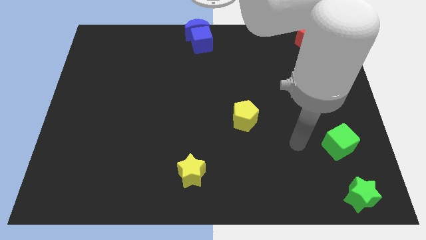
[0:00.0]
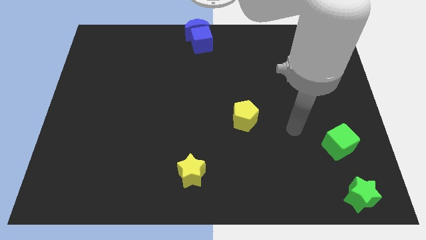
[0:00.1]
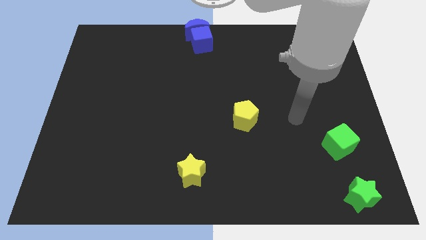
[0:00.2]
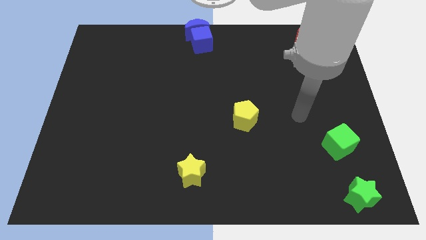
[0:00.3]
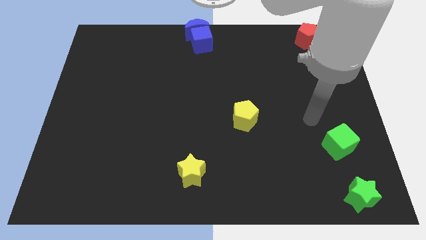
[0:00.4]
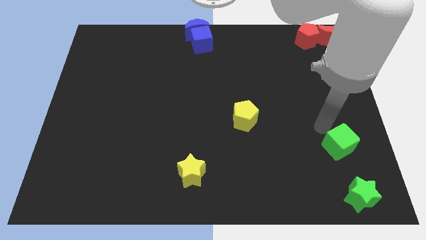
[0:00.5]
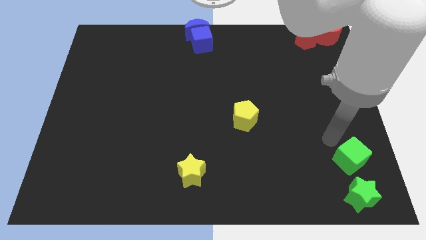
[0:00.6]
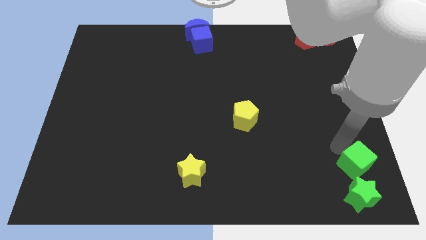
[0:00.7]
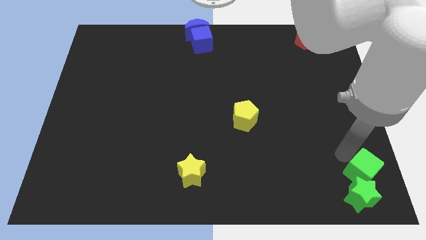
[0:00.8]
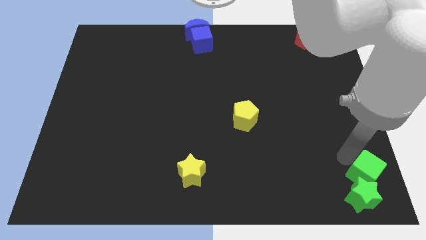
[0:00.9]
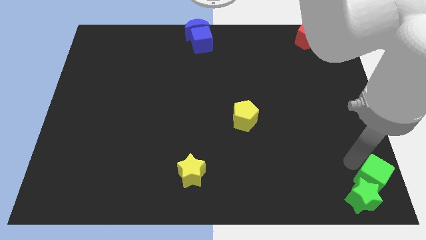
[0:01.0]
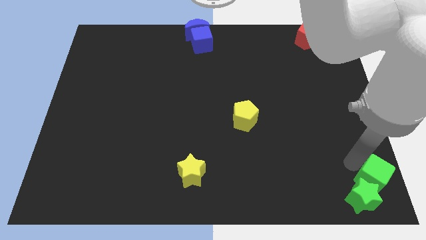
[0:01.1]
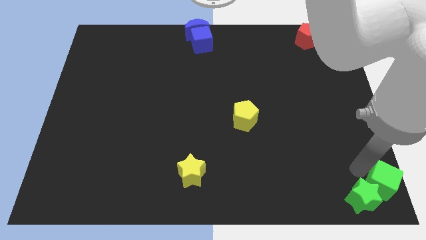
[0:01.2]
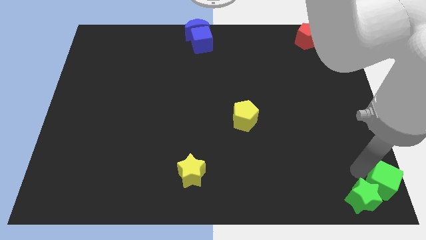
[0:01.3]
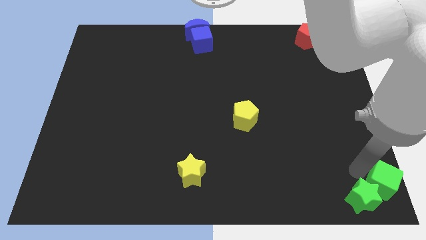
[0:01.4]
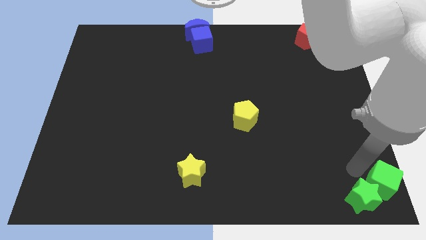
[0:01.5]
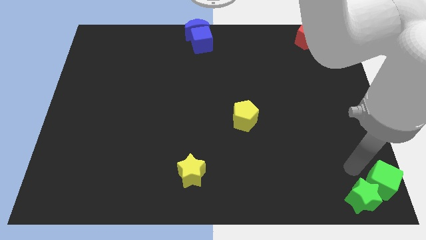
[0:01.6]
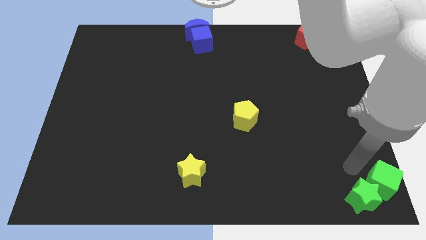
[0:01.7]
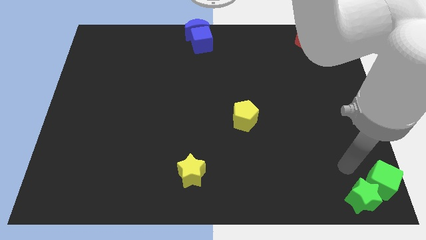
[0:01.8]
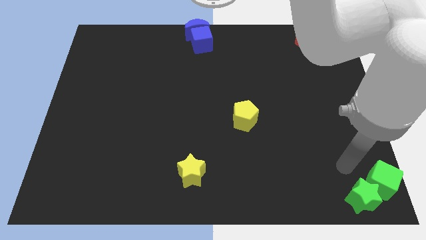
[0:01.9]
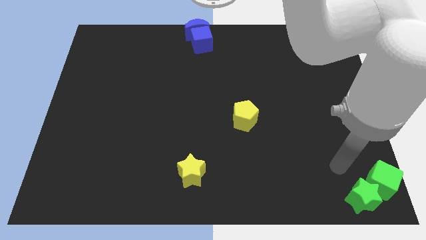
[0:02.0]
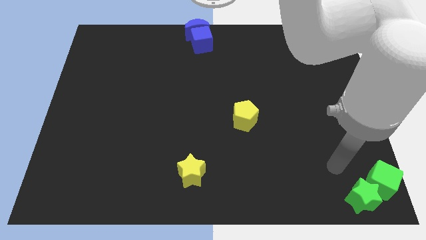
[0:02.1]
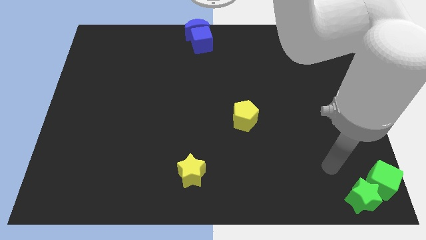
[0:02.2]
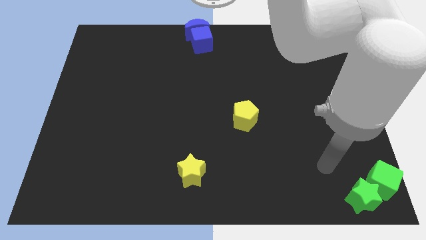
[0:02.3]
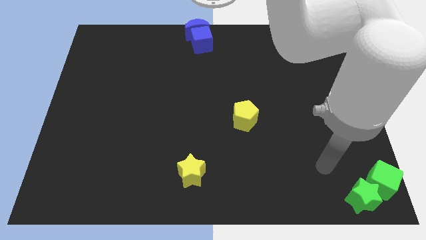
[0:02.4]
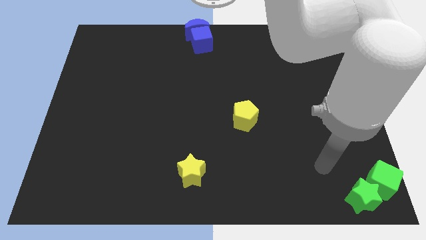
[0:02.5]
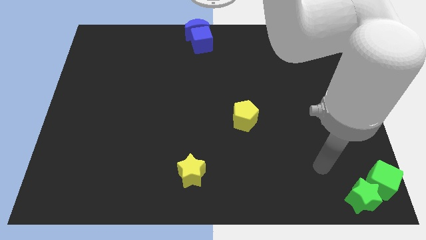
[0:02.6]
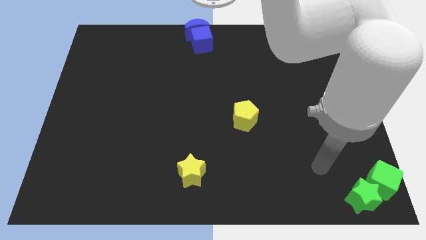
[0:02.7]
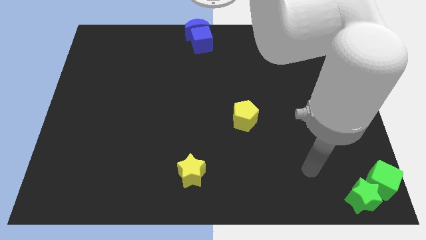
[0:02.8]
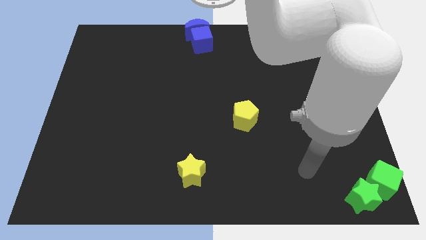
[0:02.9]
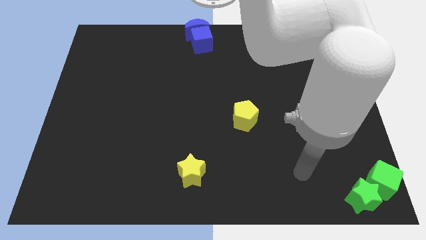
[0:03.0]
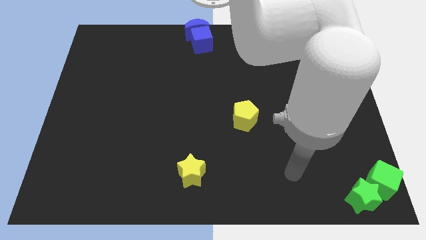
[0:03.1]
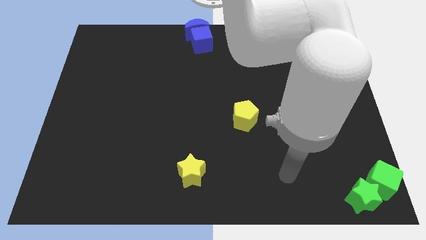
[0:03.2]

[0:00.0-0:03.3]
move green cube right above green star

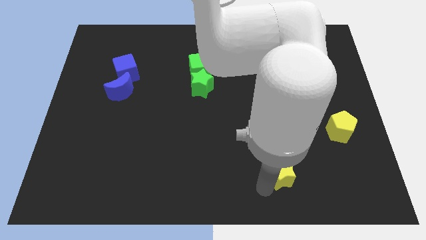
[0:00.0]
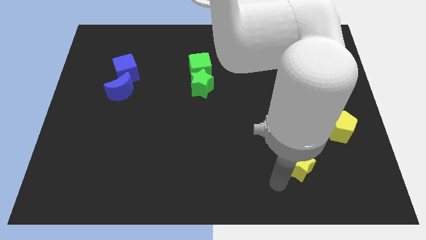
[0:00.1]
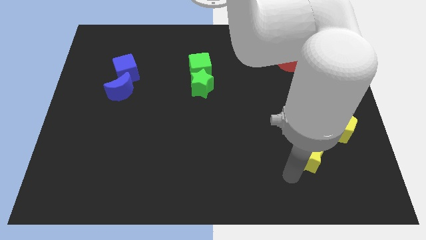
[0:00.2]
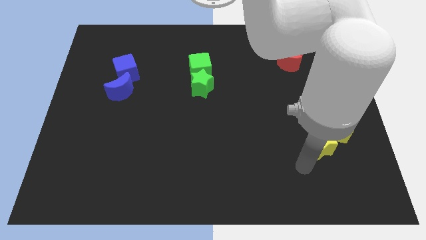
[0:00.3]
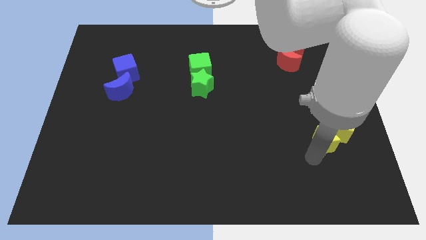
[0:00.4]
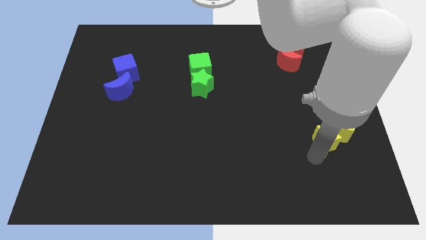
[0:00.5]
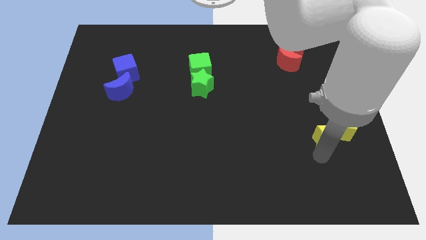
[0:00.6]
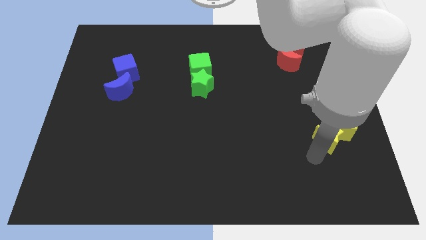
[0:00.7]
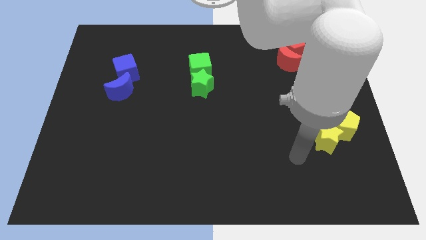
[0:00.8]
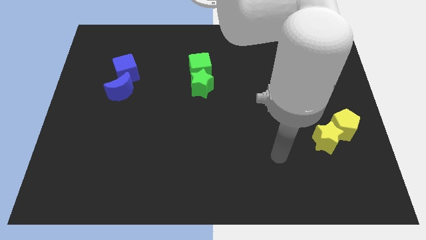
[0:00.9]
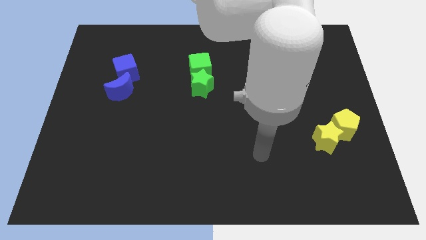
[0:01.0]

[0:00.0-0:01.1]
push yellow star into yellow pentagon

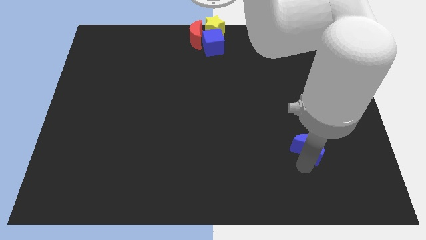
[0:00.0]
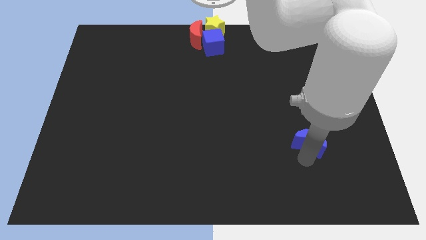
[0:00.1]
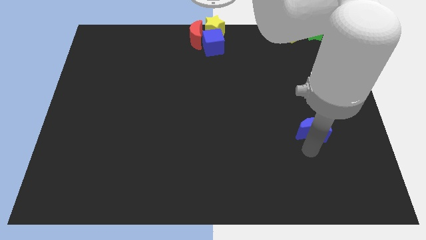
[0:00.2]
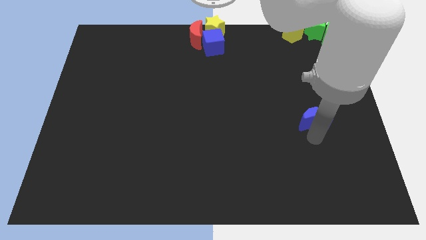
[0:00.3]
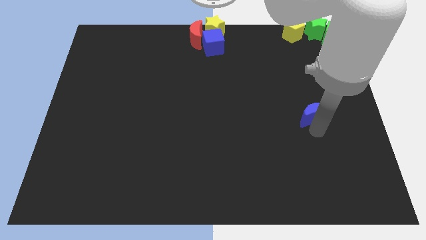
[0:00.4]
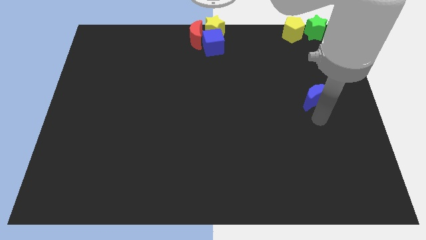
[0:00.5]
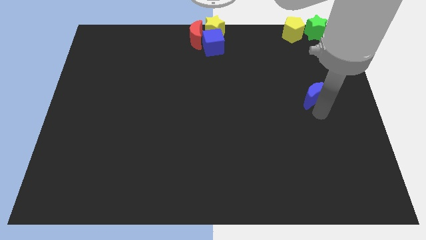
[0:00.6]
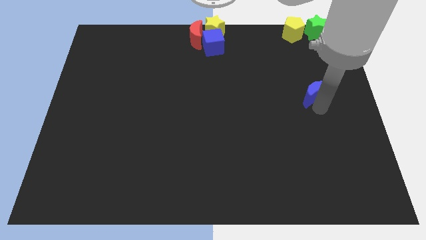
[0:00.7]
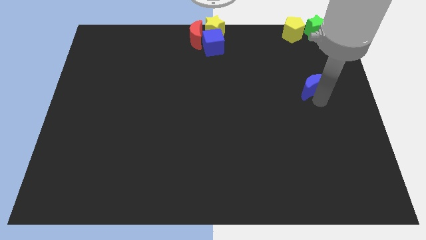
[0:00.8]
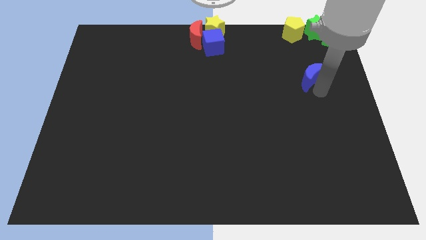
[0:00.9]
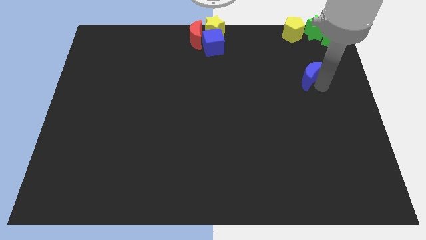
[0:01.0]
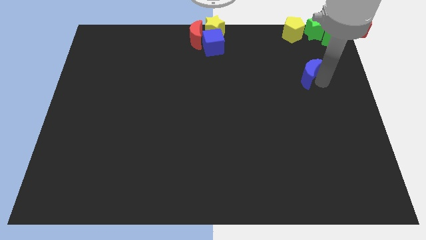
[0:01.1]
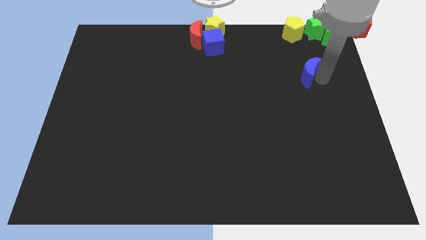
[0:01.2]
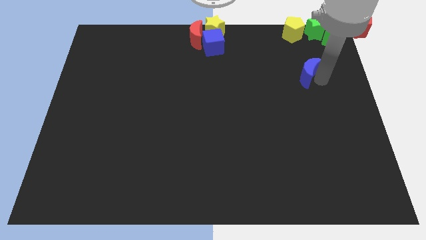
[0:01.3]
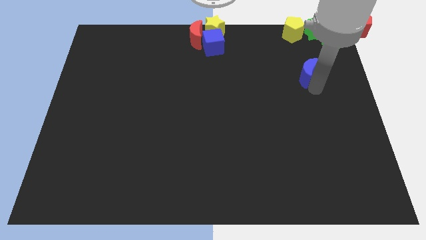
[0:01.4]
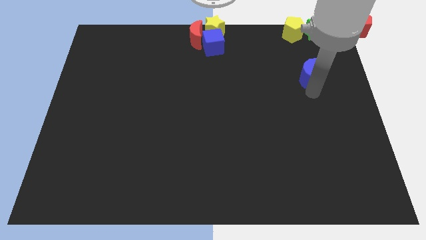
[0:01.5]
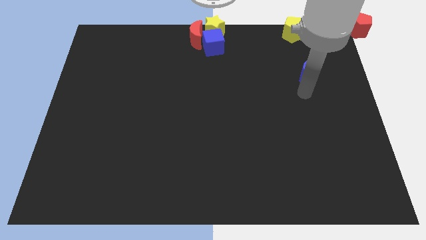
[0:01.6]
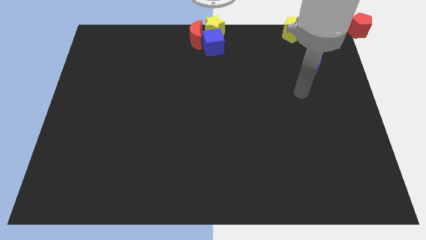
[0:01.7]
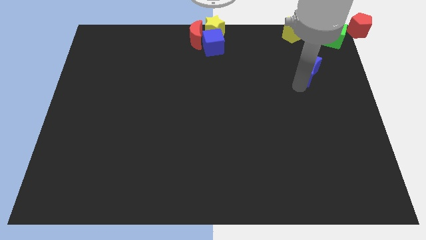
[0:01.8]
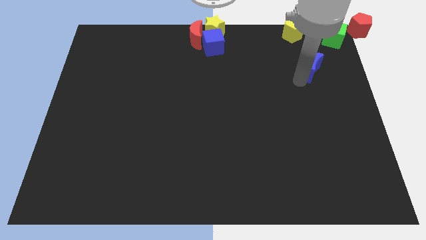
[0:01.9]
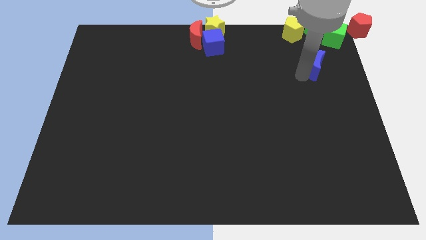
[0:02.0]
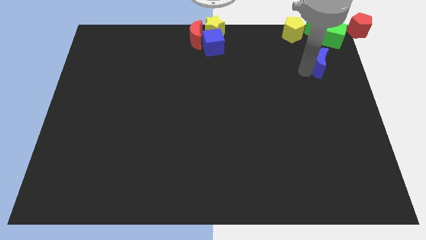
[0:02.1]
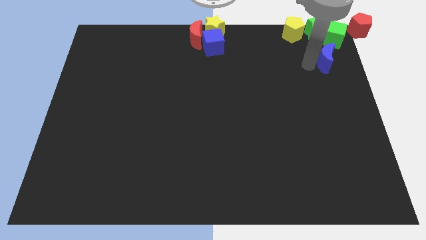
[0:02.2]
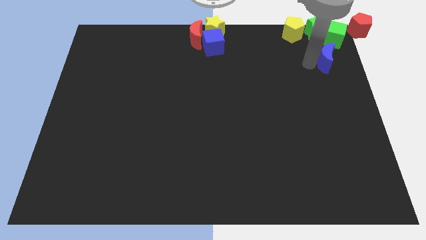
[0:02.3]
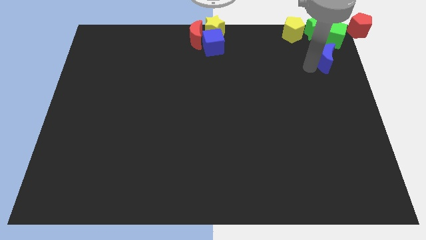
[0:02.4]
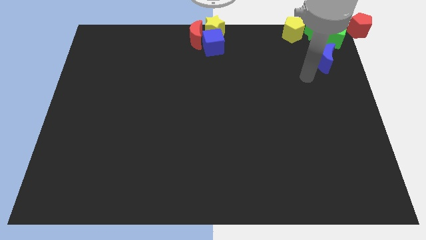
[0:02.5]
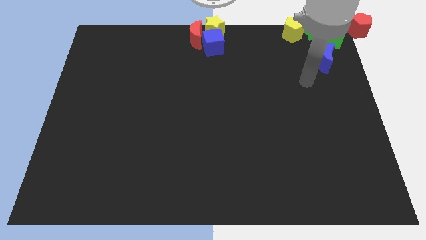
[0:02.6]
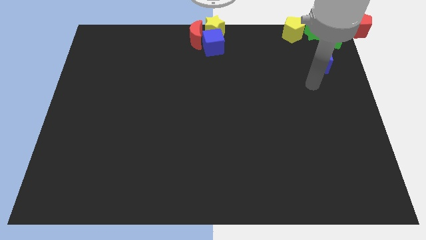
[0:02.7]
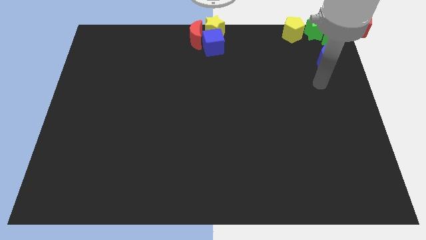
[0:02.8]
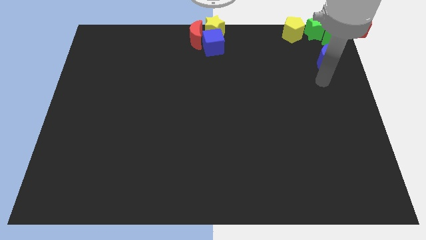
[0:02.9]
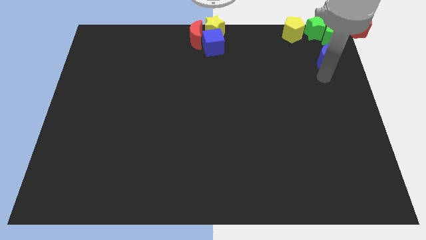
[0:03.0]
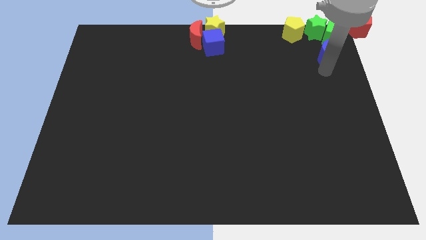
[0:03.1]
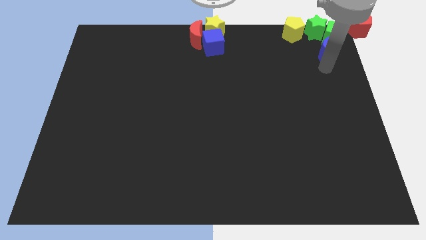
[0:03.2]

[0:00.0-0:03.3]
move blue cube towards green cube

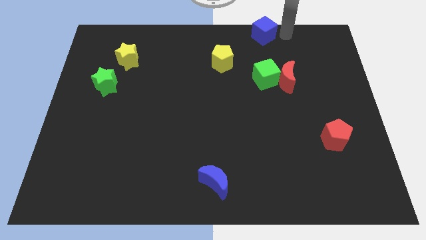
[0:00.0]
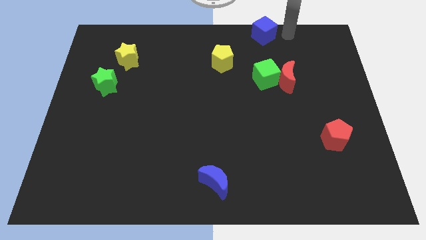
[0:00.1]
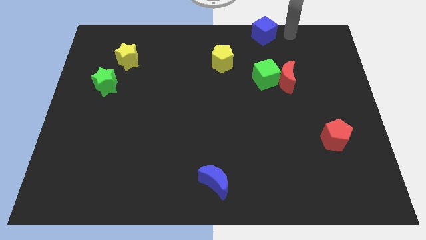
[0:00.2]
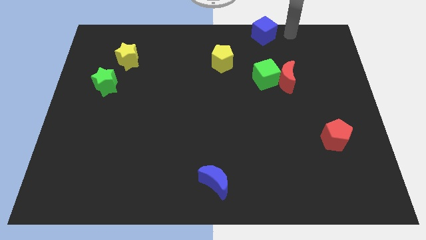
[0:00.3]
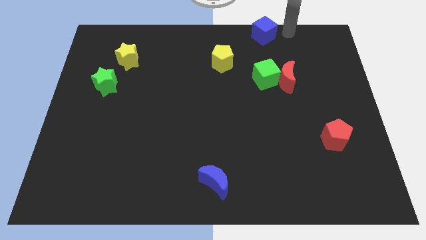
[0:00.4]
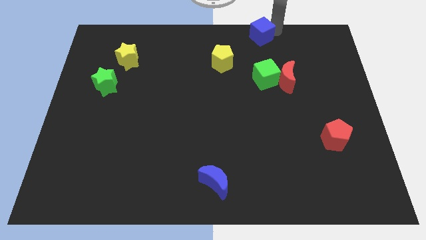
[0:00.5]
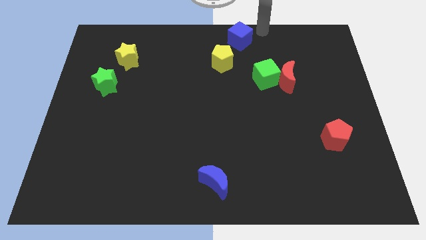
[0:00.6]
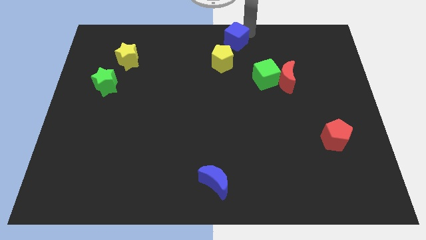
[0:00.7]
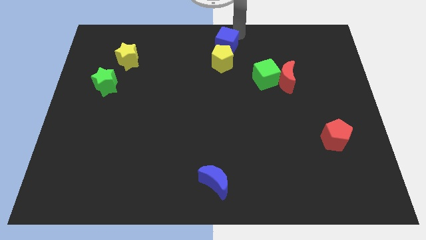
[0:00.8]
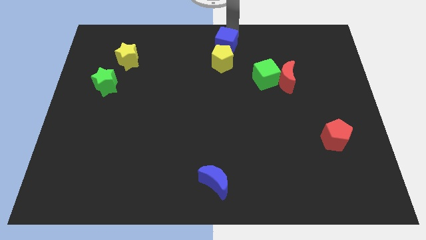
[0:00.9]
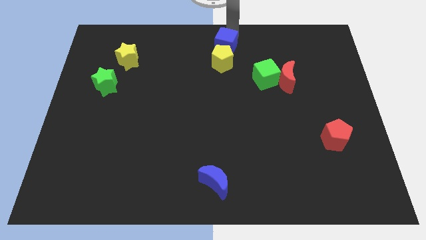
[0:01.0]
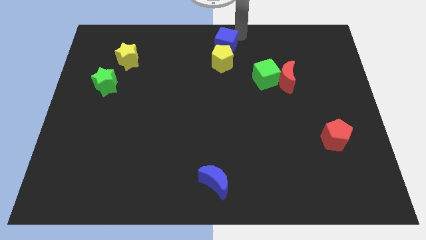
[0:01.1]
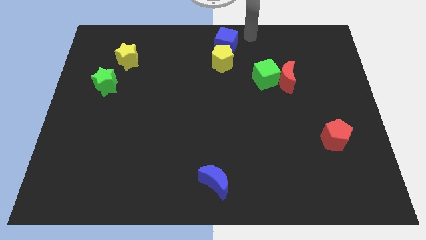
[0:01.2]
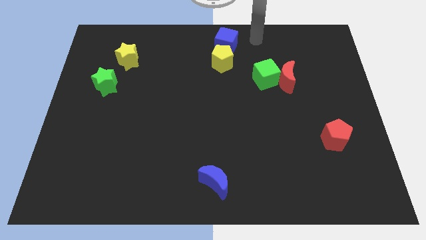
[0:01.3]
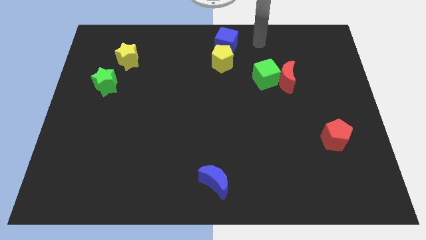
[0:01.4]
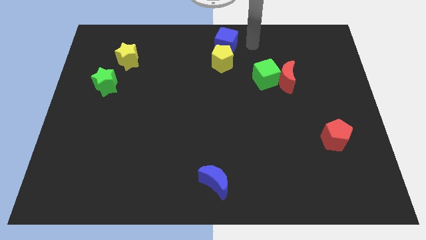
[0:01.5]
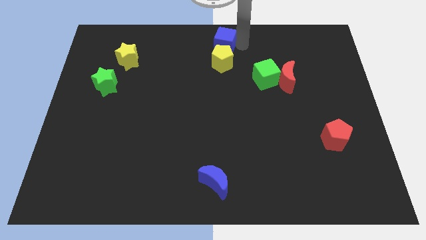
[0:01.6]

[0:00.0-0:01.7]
place the blue cube above the yellow pentagon
